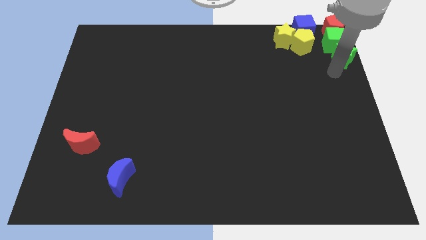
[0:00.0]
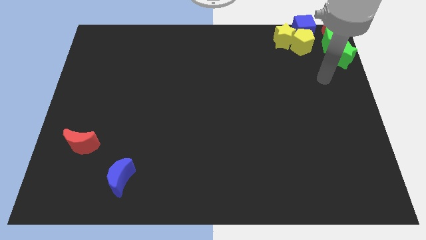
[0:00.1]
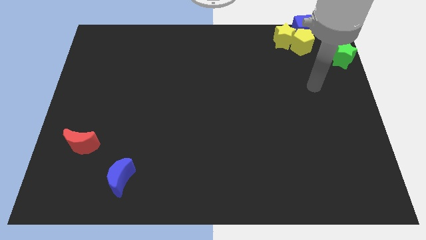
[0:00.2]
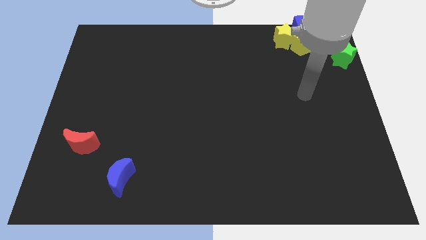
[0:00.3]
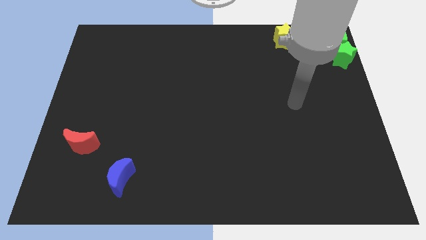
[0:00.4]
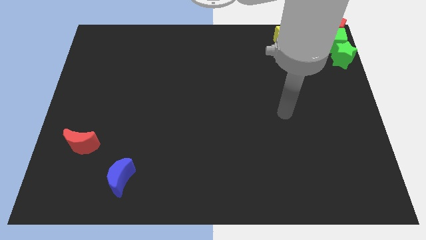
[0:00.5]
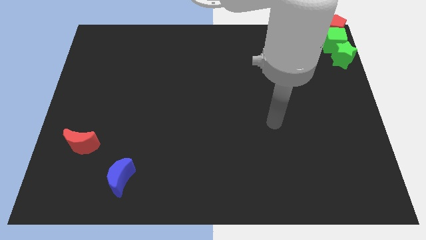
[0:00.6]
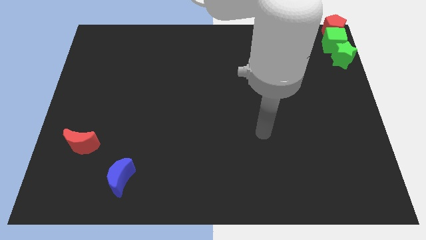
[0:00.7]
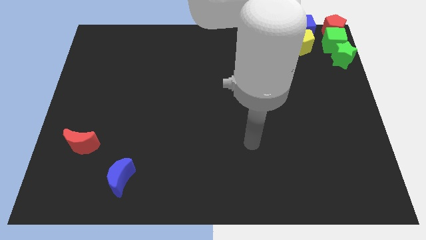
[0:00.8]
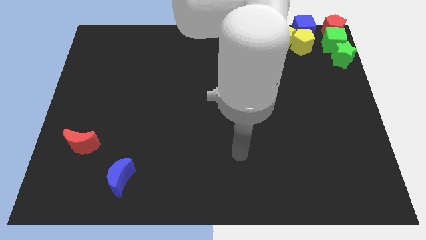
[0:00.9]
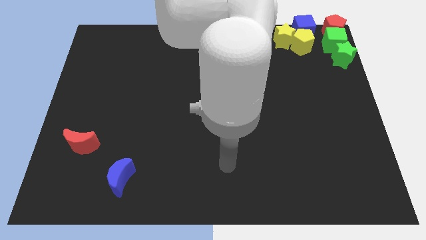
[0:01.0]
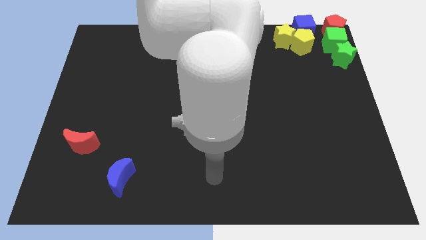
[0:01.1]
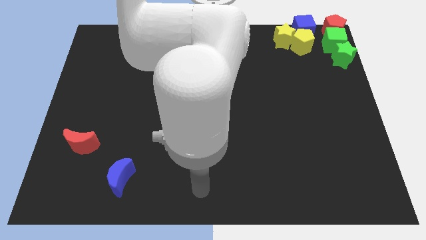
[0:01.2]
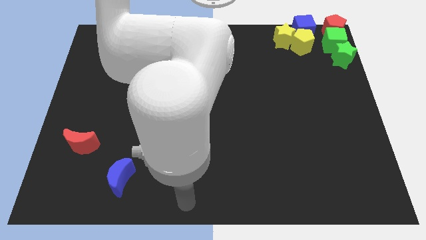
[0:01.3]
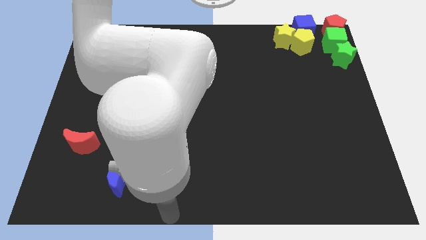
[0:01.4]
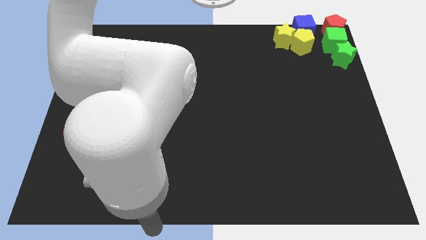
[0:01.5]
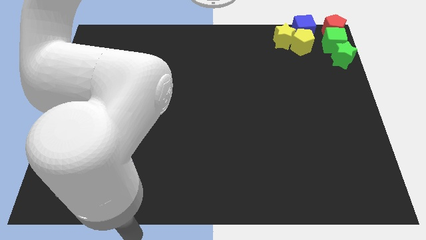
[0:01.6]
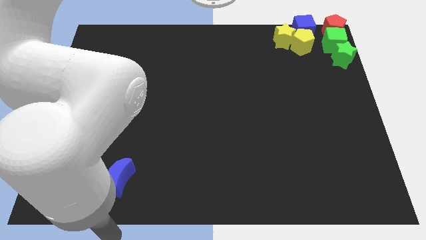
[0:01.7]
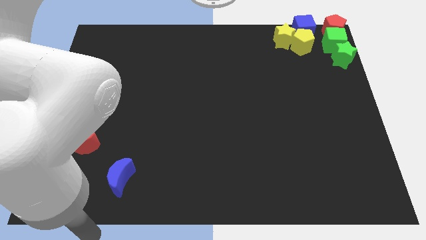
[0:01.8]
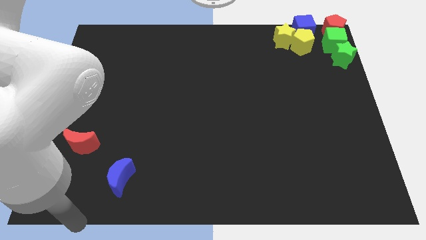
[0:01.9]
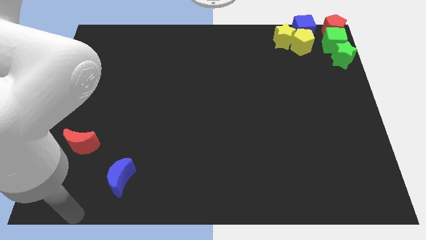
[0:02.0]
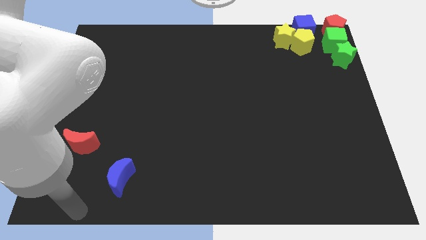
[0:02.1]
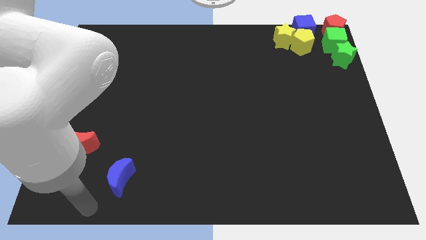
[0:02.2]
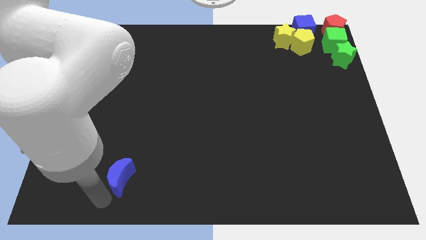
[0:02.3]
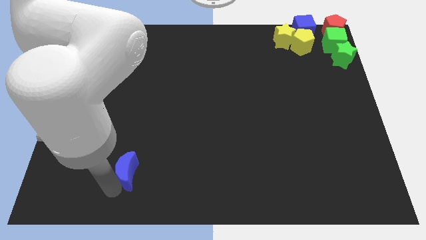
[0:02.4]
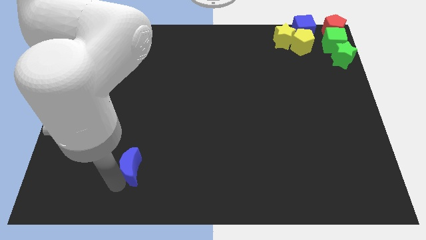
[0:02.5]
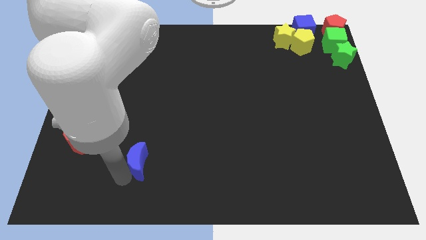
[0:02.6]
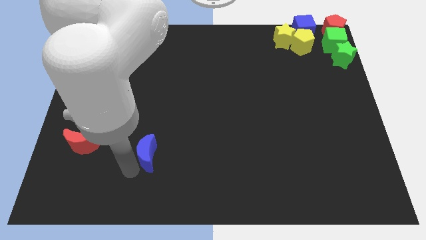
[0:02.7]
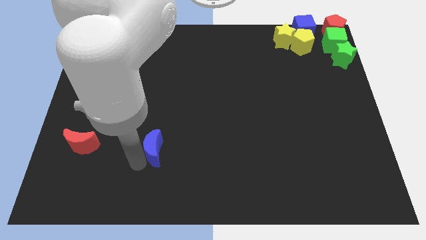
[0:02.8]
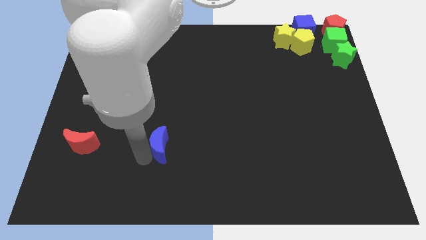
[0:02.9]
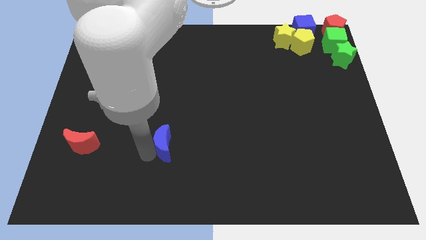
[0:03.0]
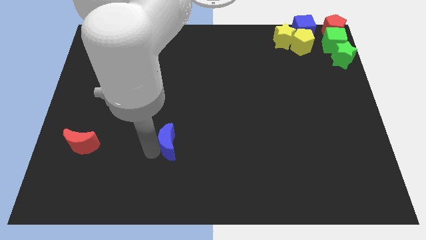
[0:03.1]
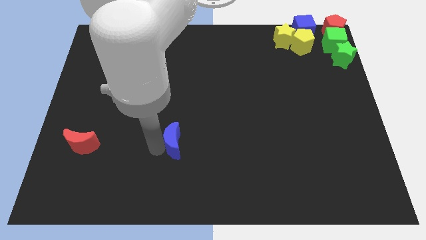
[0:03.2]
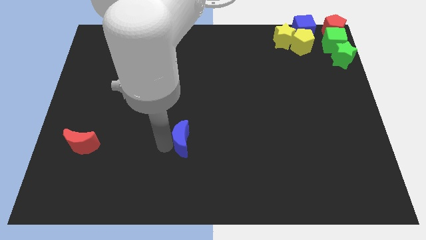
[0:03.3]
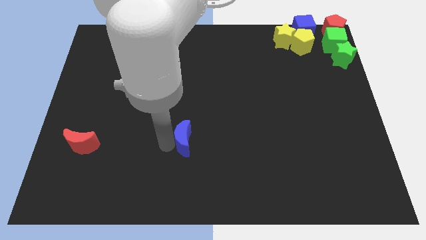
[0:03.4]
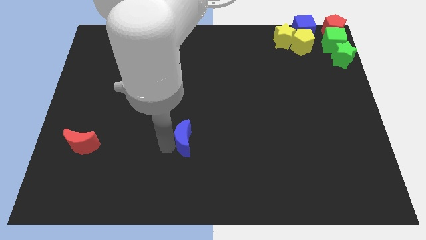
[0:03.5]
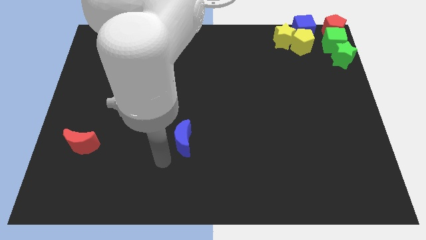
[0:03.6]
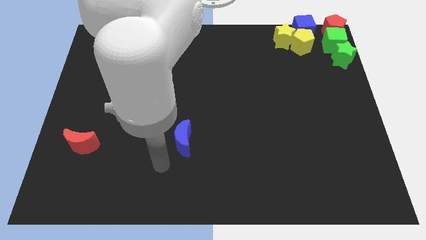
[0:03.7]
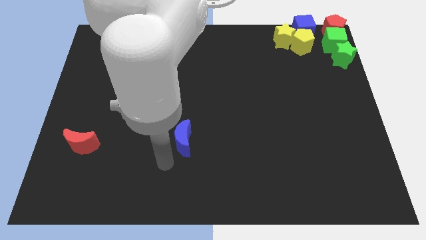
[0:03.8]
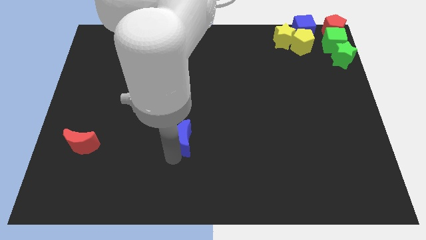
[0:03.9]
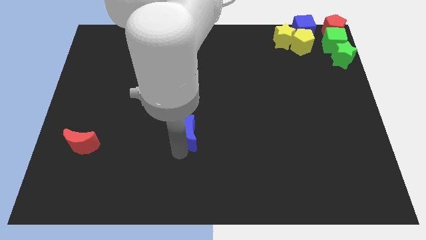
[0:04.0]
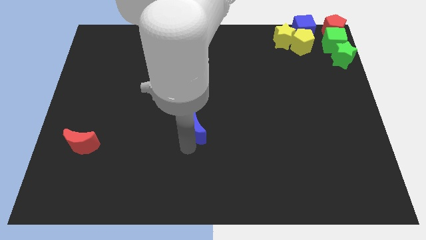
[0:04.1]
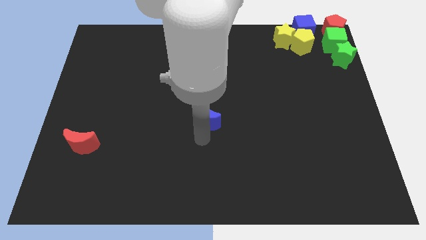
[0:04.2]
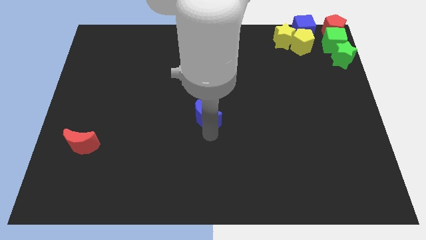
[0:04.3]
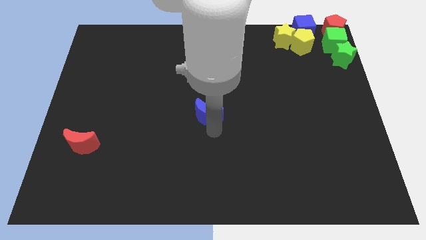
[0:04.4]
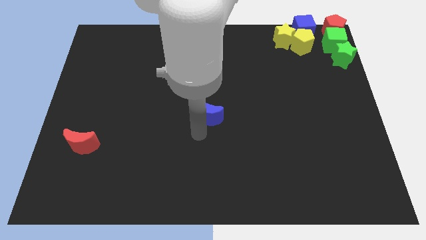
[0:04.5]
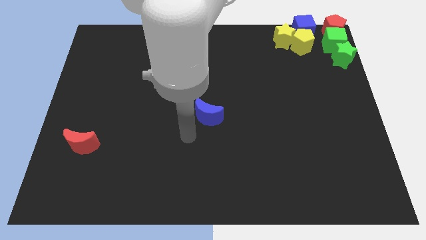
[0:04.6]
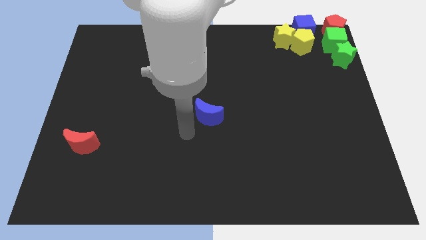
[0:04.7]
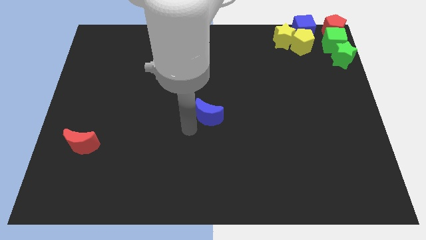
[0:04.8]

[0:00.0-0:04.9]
move the blue crescent to the center of the board

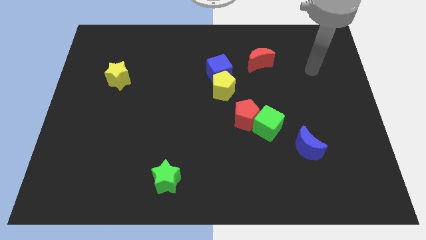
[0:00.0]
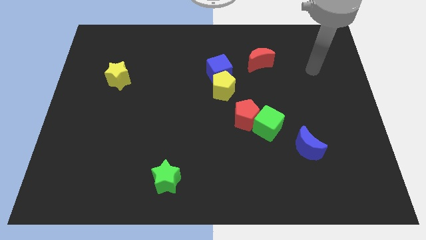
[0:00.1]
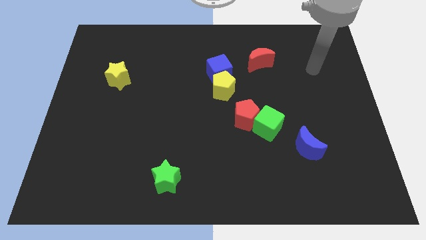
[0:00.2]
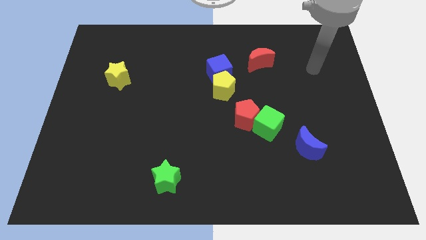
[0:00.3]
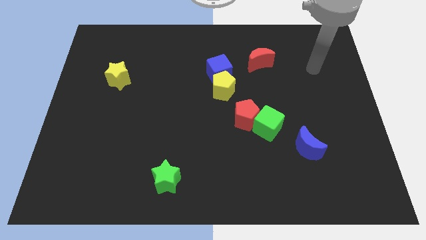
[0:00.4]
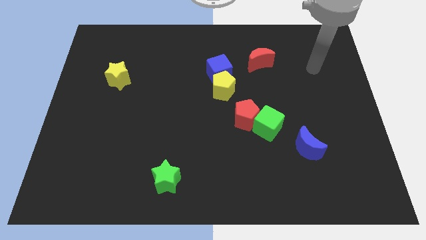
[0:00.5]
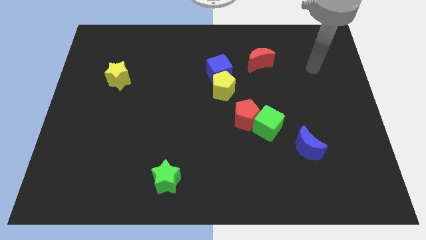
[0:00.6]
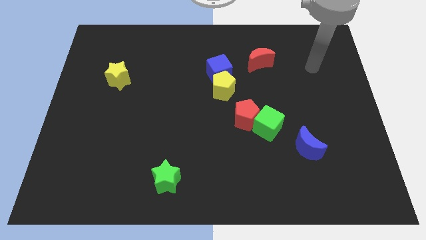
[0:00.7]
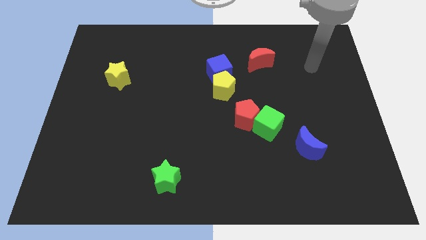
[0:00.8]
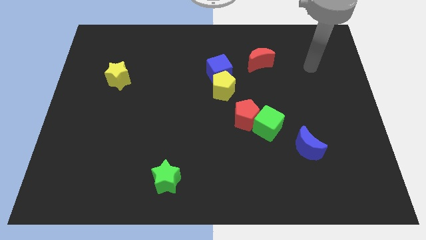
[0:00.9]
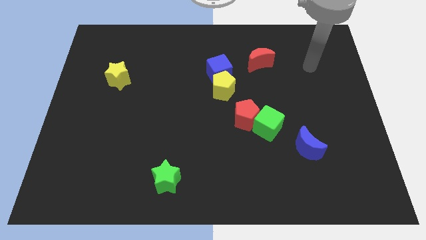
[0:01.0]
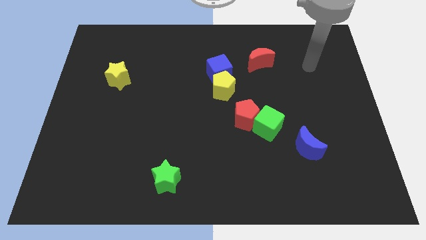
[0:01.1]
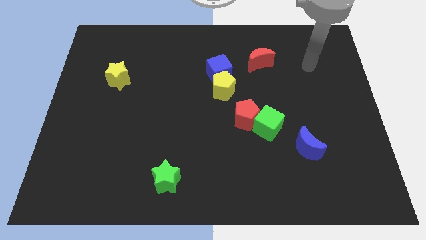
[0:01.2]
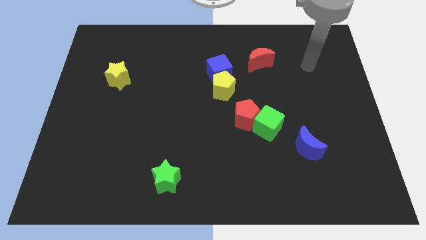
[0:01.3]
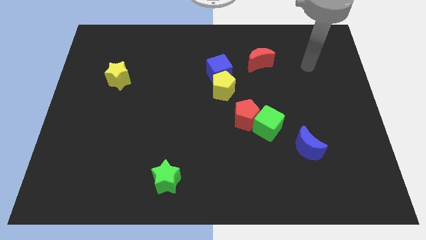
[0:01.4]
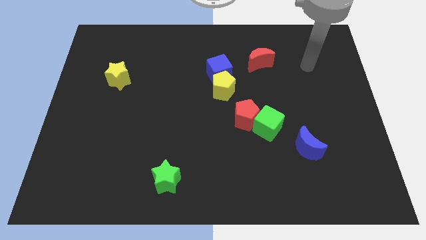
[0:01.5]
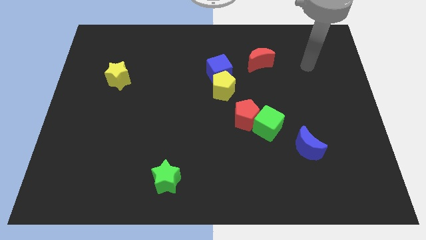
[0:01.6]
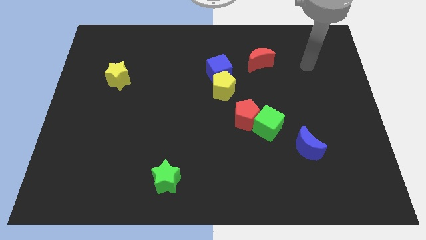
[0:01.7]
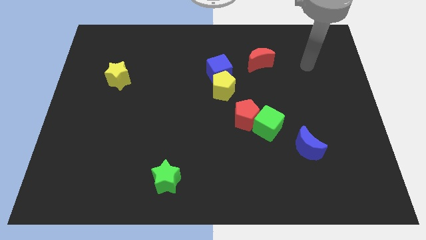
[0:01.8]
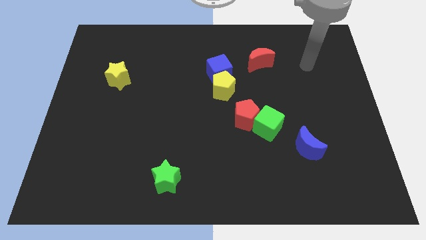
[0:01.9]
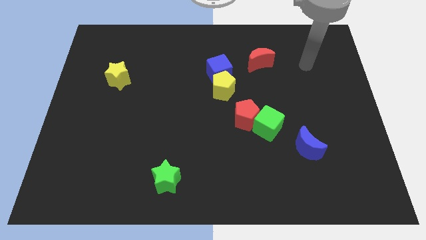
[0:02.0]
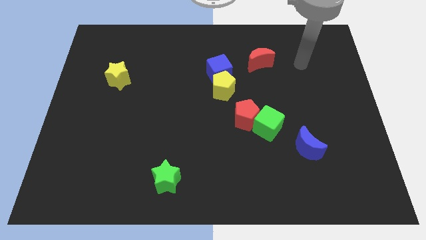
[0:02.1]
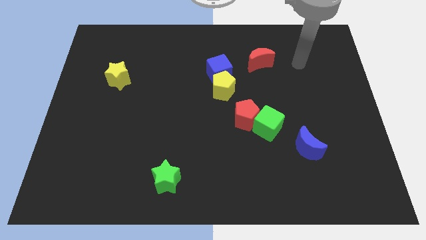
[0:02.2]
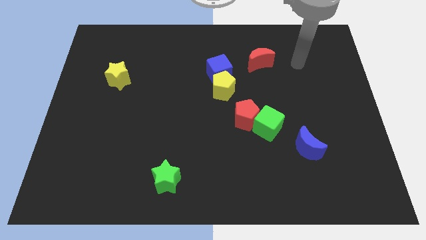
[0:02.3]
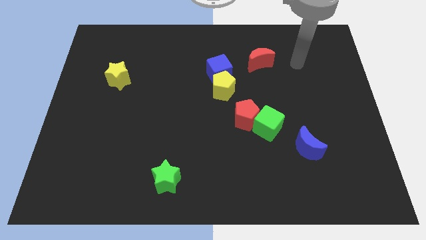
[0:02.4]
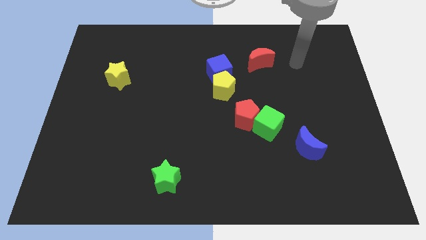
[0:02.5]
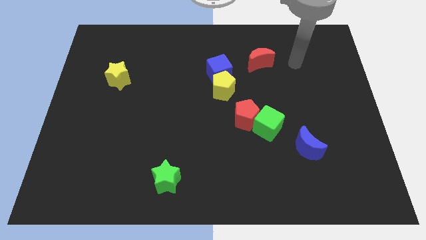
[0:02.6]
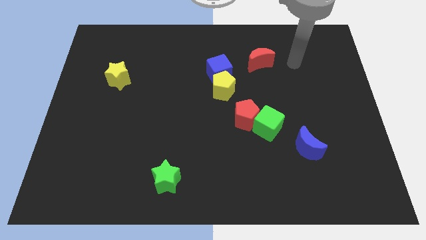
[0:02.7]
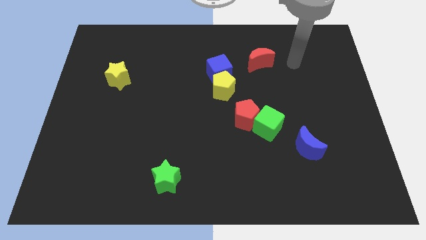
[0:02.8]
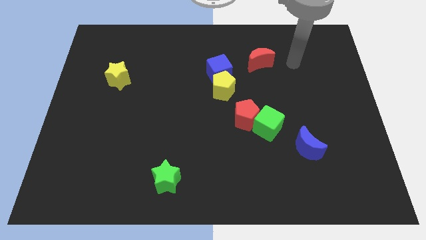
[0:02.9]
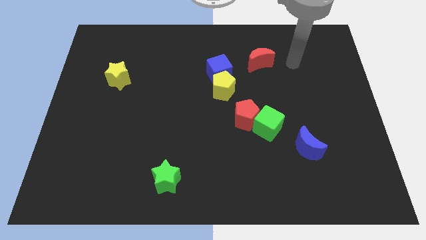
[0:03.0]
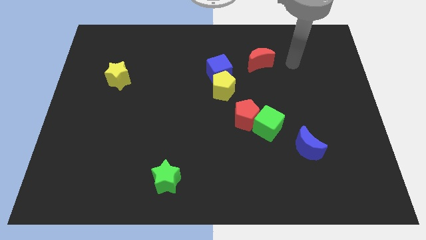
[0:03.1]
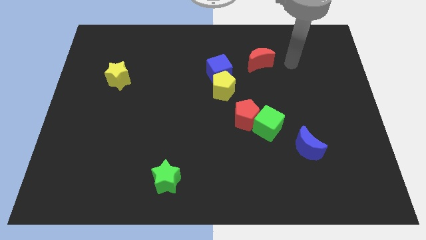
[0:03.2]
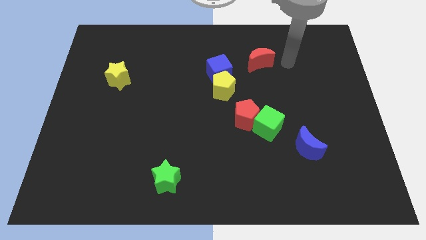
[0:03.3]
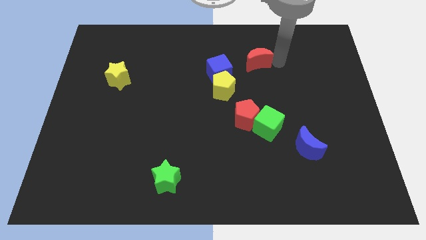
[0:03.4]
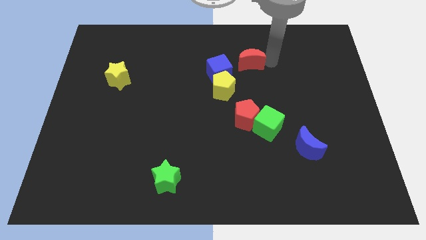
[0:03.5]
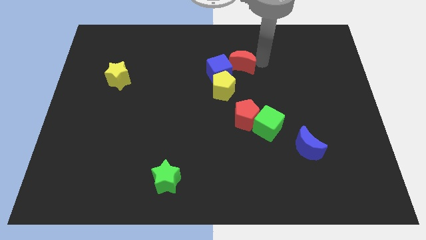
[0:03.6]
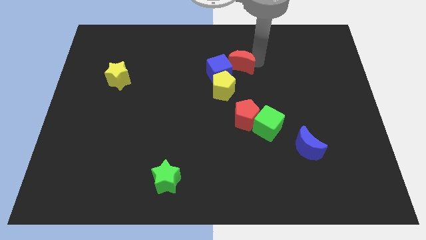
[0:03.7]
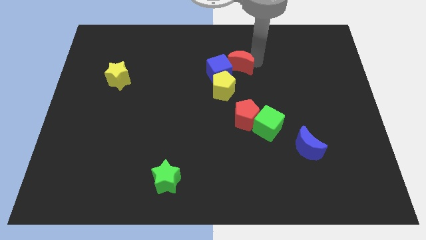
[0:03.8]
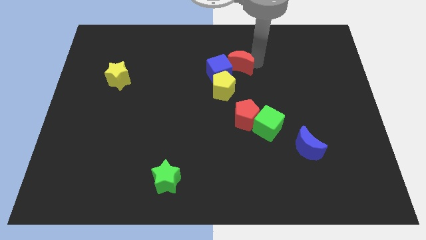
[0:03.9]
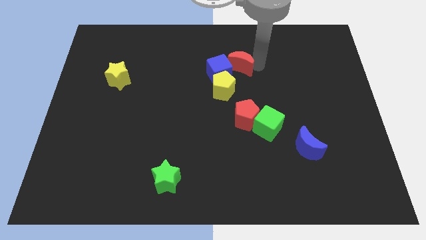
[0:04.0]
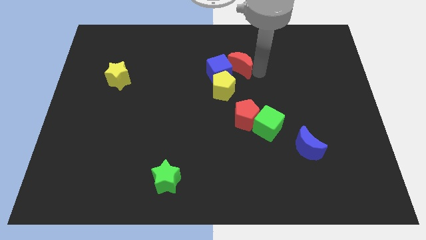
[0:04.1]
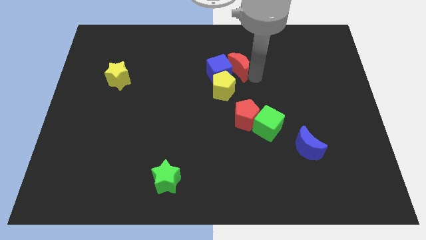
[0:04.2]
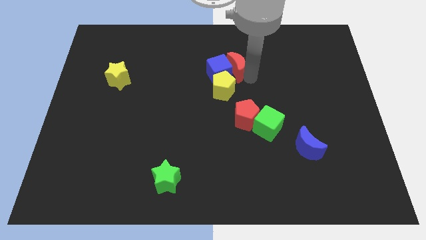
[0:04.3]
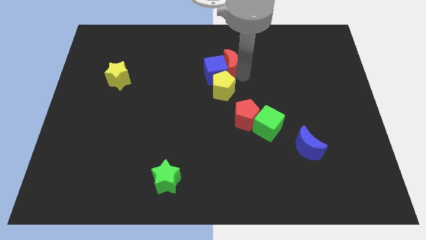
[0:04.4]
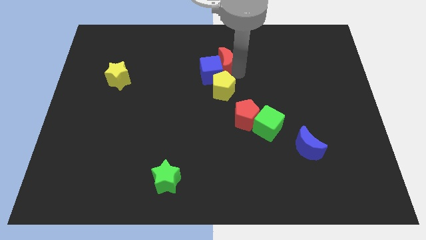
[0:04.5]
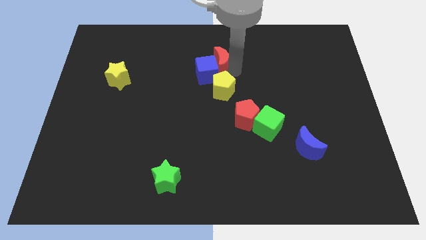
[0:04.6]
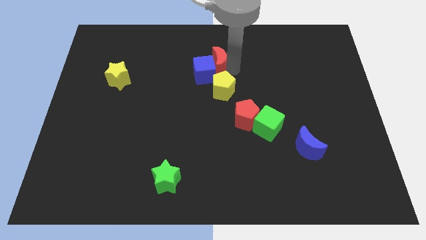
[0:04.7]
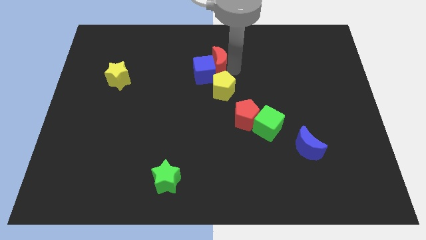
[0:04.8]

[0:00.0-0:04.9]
move the red crescent into the blue cube
